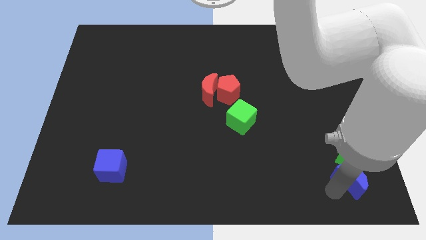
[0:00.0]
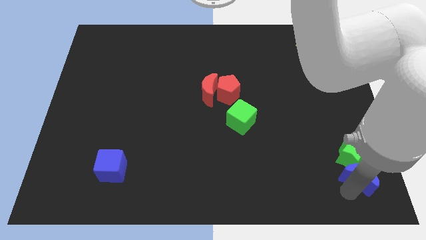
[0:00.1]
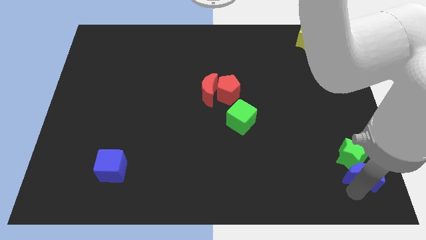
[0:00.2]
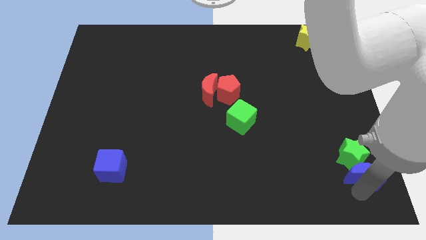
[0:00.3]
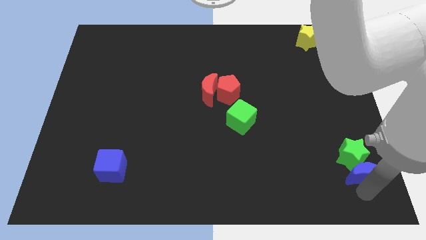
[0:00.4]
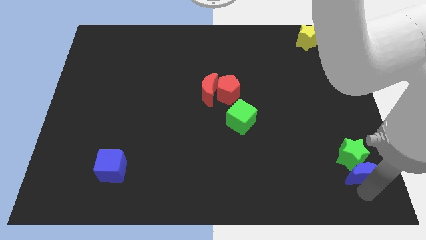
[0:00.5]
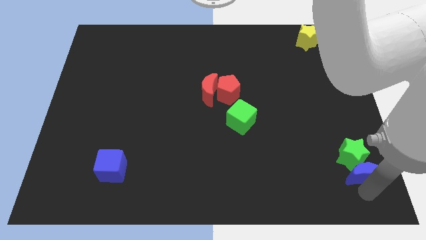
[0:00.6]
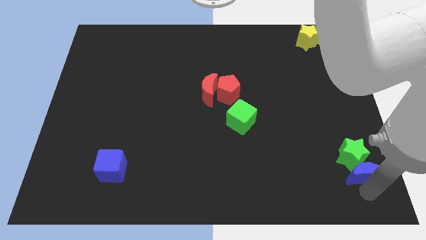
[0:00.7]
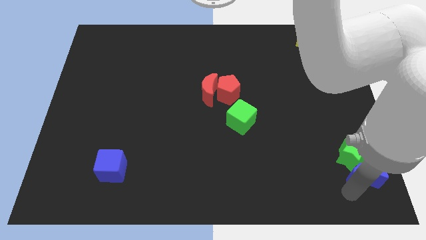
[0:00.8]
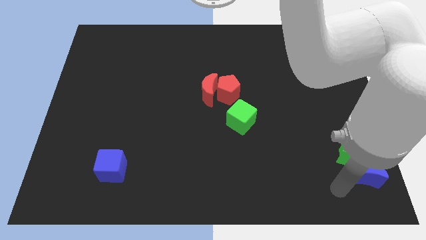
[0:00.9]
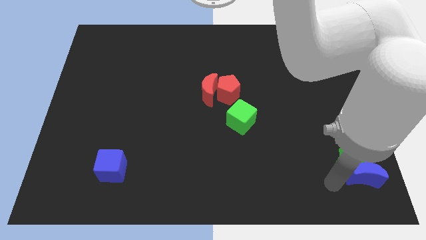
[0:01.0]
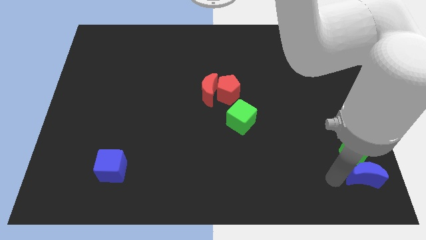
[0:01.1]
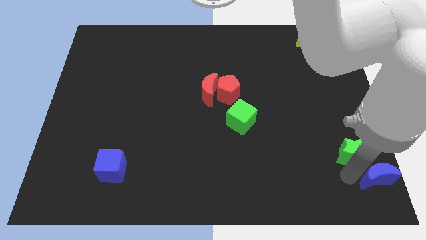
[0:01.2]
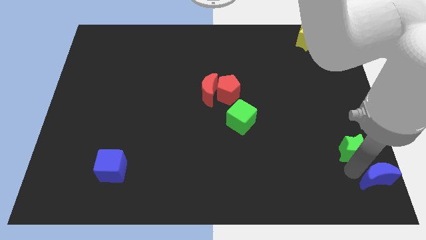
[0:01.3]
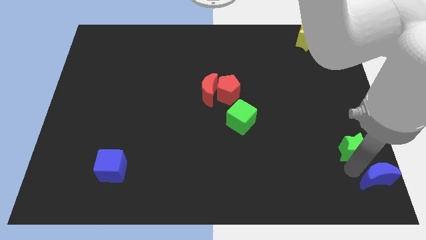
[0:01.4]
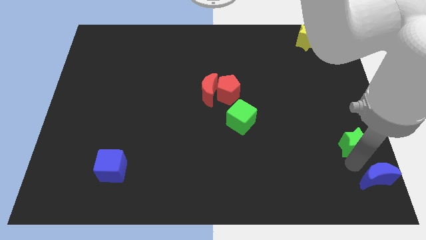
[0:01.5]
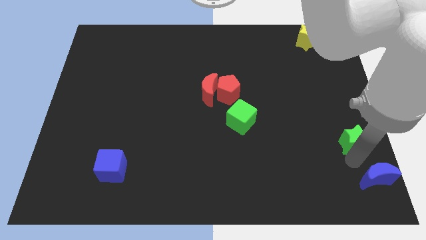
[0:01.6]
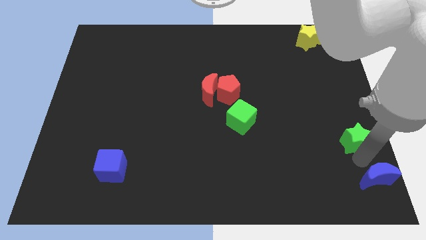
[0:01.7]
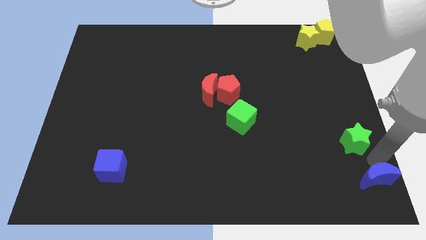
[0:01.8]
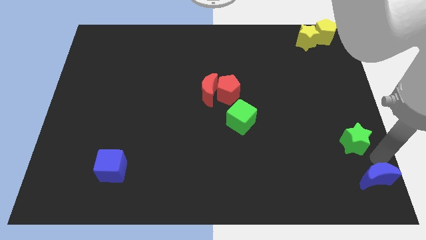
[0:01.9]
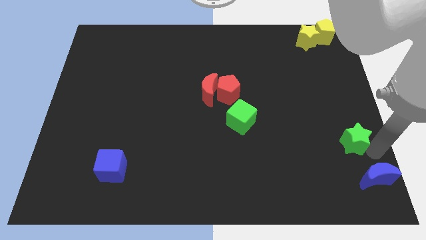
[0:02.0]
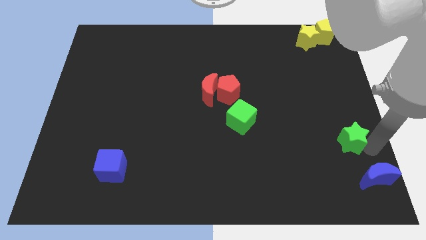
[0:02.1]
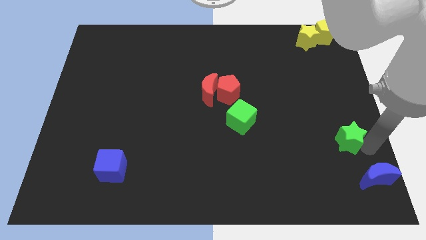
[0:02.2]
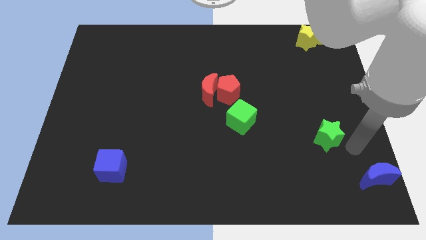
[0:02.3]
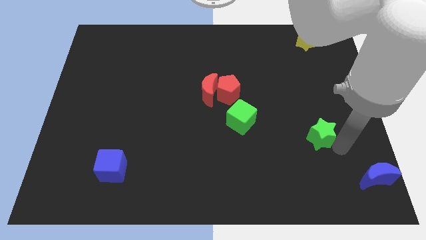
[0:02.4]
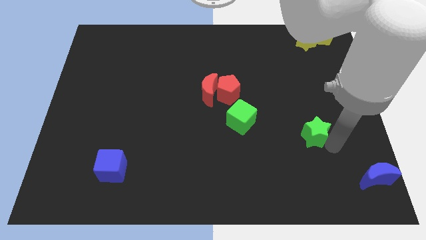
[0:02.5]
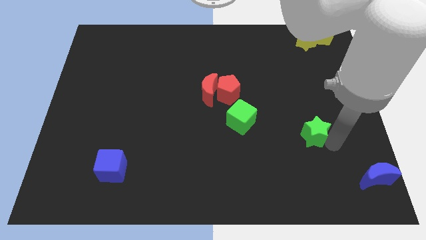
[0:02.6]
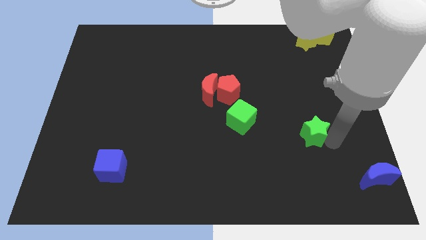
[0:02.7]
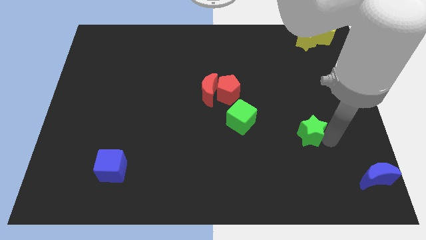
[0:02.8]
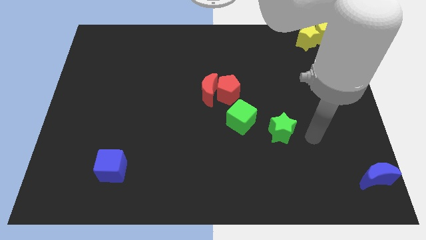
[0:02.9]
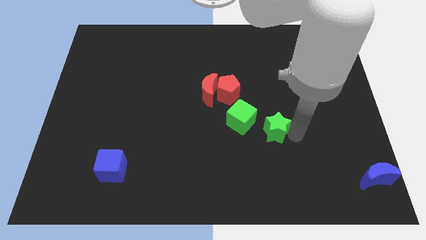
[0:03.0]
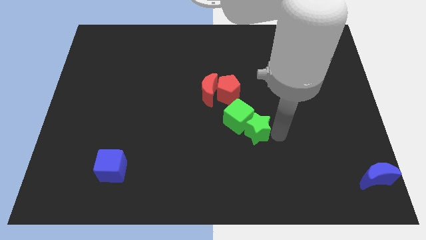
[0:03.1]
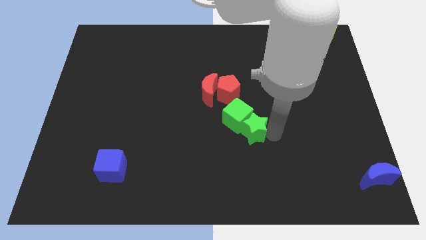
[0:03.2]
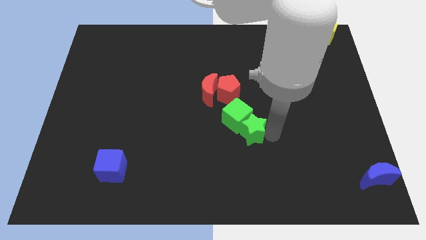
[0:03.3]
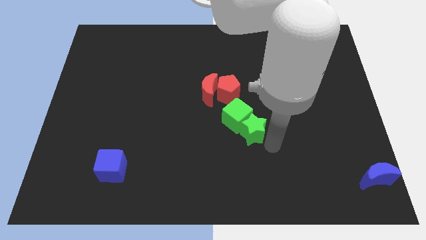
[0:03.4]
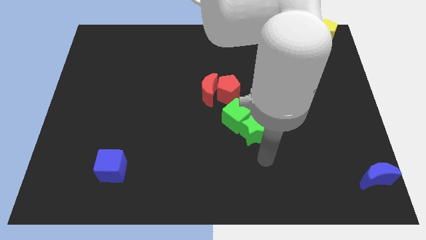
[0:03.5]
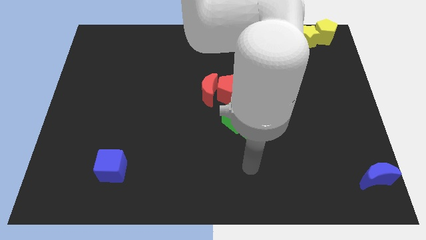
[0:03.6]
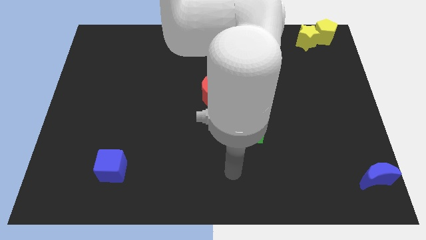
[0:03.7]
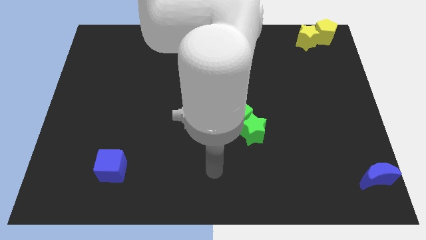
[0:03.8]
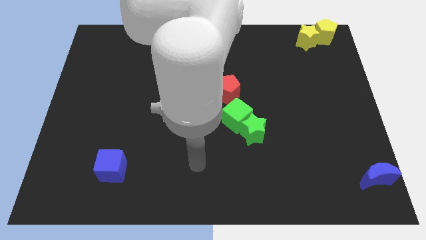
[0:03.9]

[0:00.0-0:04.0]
push the green star into the green cube

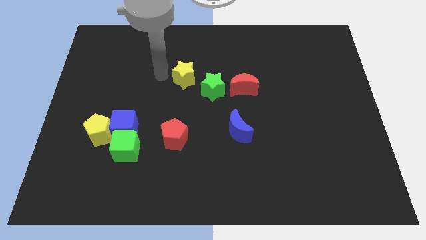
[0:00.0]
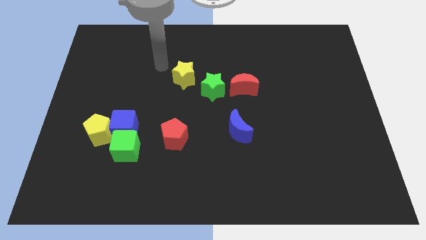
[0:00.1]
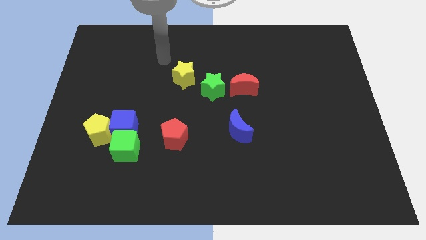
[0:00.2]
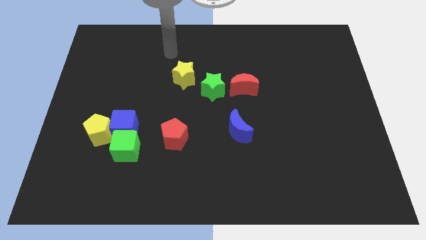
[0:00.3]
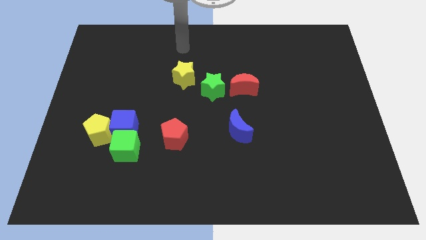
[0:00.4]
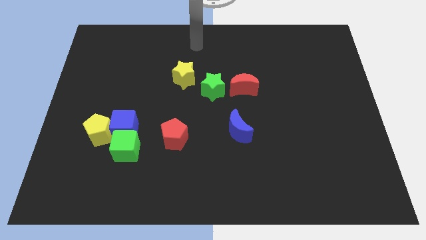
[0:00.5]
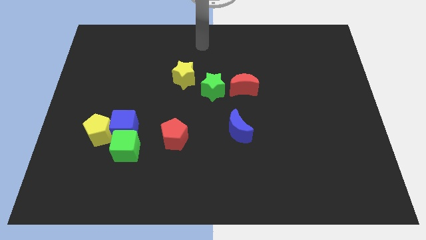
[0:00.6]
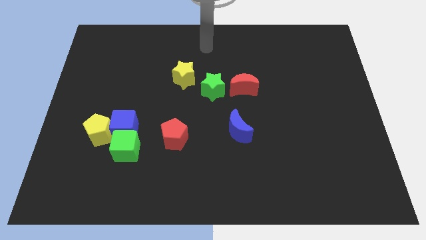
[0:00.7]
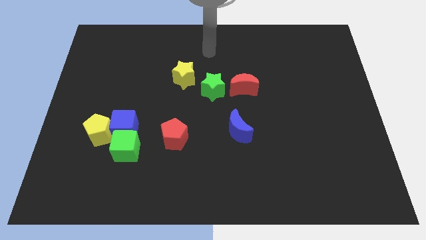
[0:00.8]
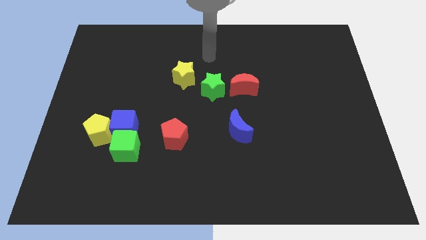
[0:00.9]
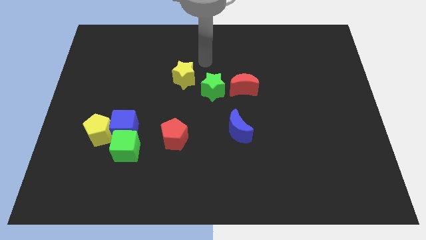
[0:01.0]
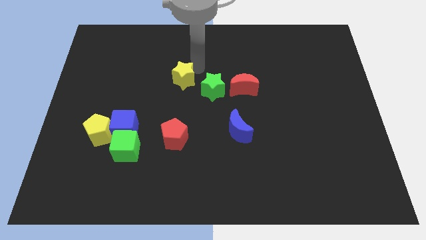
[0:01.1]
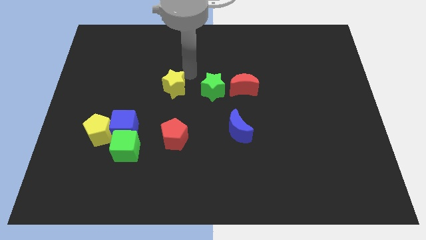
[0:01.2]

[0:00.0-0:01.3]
touch the top right side of the yellow star

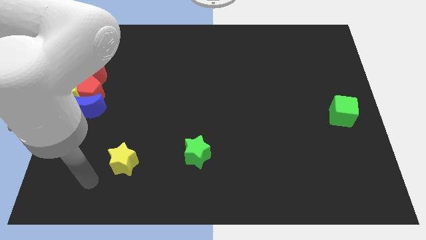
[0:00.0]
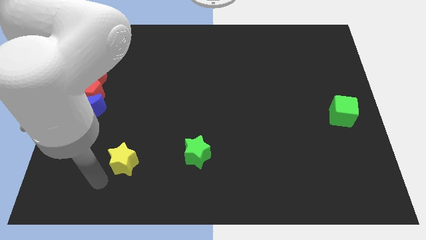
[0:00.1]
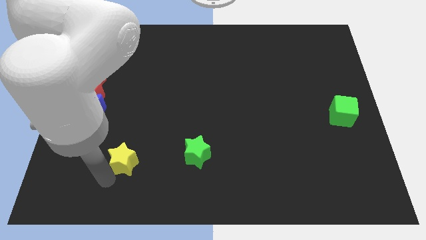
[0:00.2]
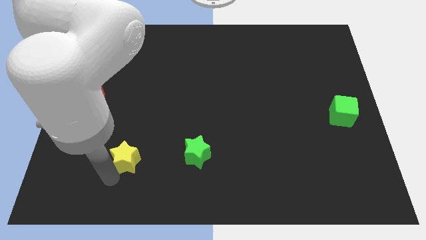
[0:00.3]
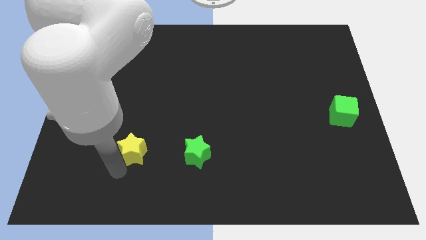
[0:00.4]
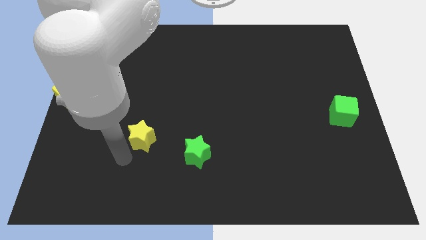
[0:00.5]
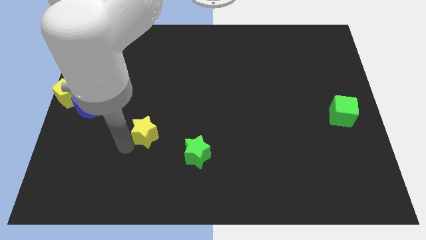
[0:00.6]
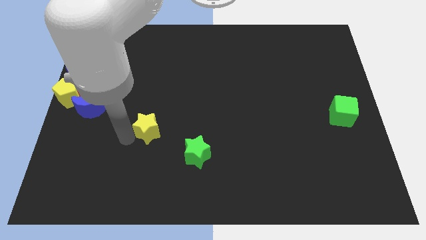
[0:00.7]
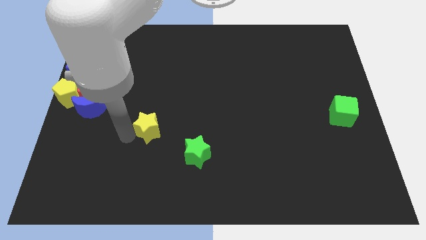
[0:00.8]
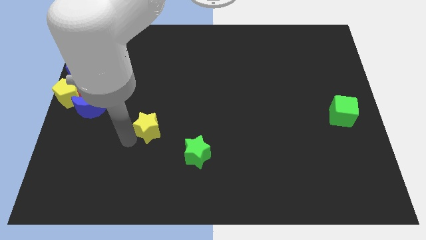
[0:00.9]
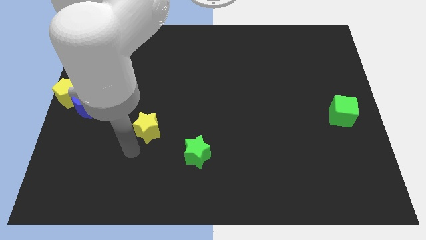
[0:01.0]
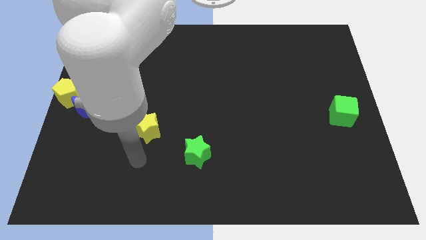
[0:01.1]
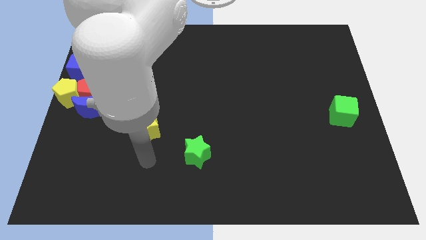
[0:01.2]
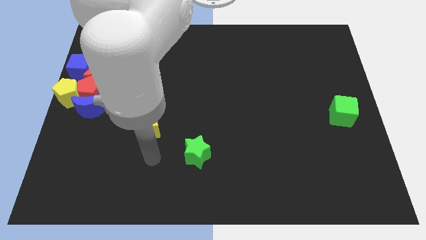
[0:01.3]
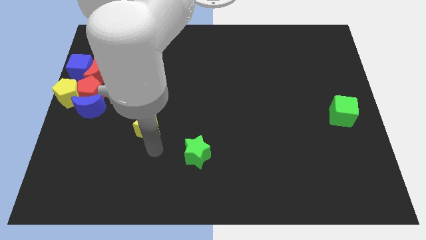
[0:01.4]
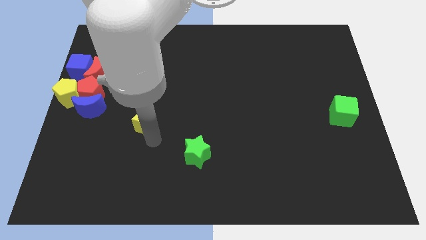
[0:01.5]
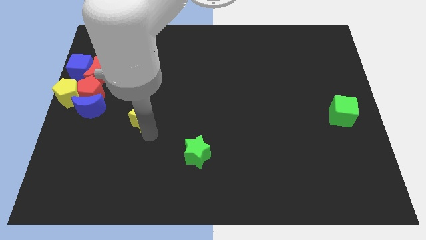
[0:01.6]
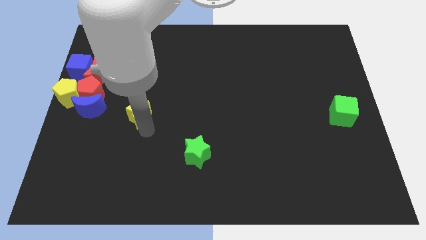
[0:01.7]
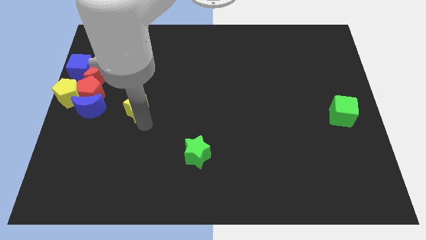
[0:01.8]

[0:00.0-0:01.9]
move the yellow star to the right of the blue moon

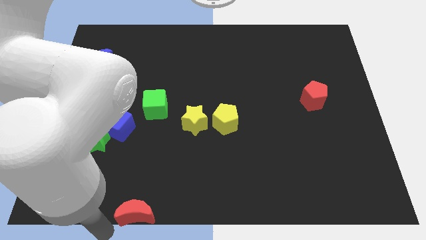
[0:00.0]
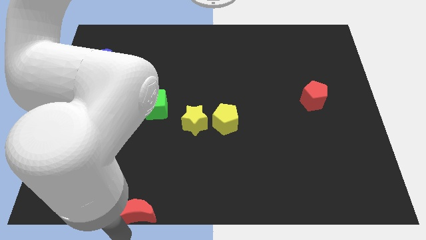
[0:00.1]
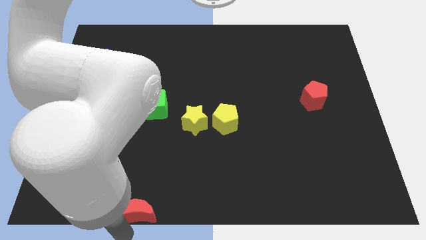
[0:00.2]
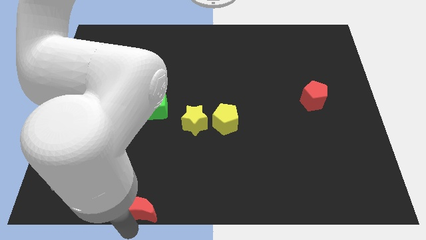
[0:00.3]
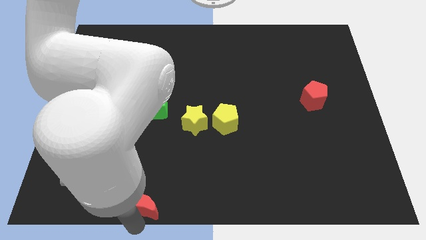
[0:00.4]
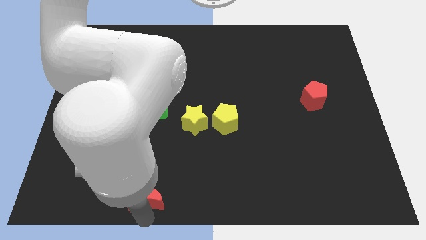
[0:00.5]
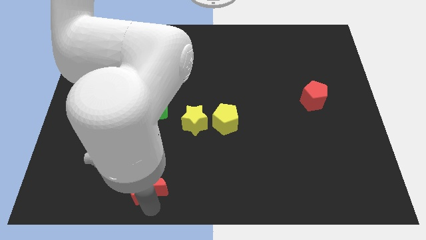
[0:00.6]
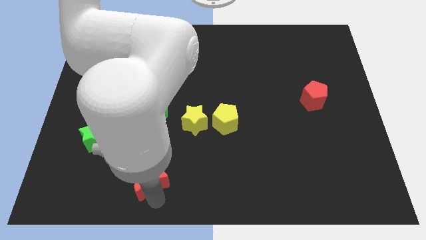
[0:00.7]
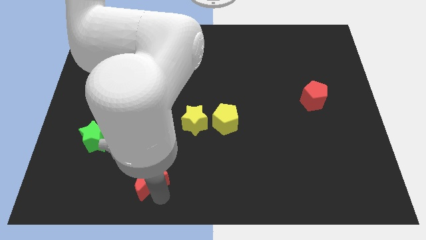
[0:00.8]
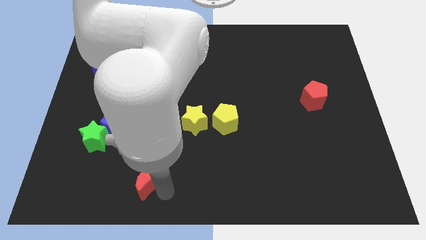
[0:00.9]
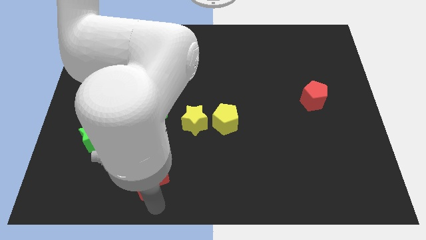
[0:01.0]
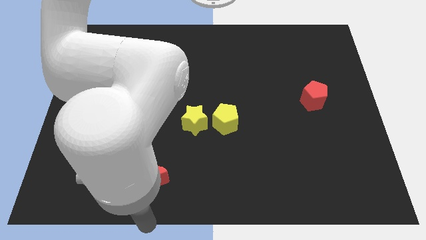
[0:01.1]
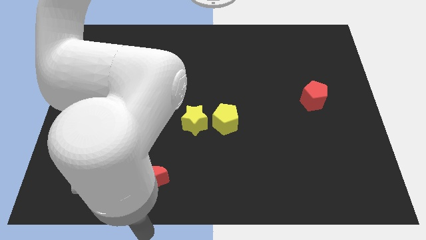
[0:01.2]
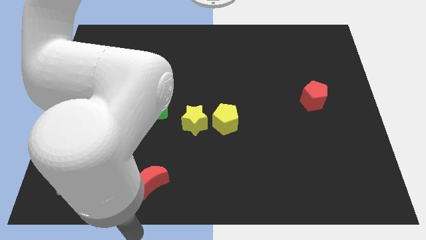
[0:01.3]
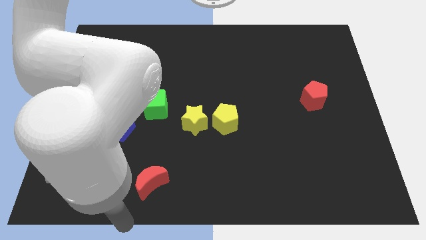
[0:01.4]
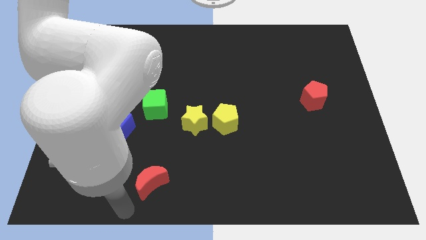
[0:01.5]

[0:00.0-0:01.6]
push red crescent slight towards upwards

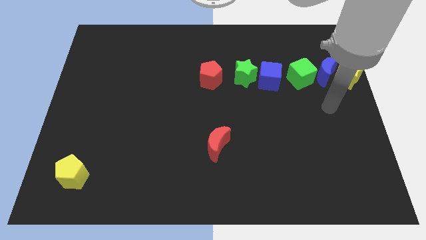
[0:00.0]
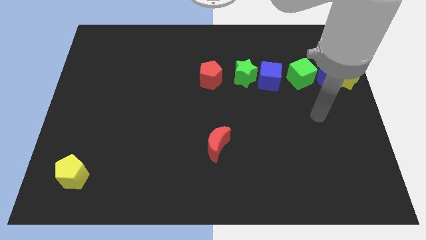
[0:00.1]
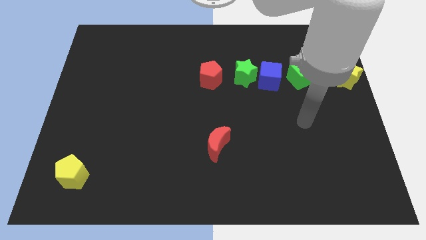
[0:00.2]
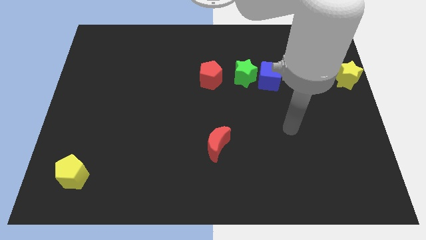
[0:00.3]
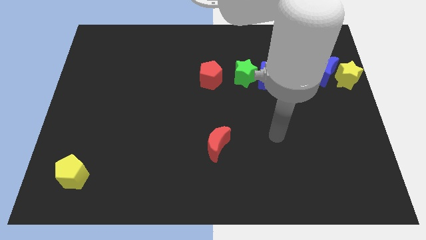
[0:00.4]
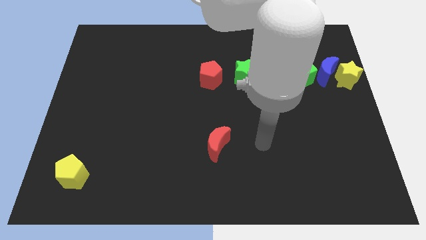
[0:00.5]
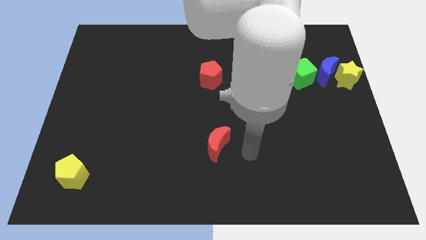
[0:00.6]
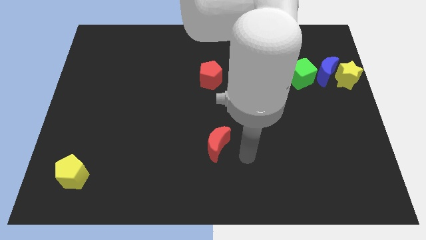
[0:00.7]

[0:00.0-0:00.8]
go and point your hand at the right of the red crescent
